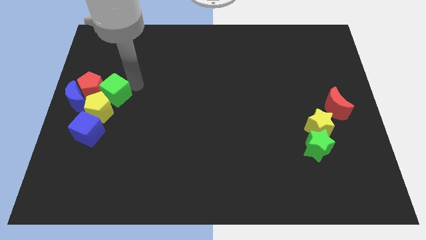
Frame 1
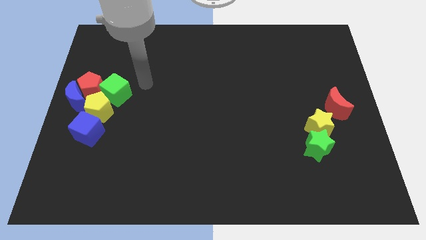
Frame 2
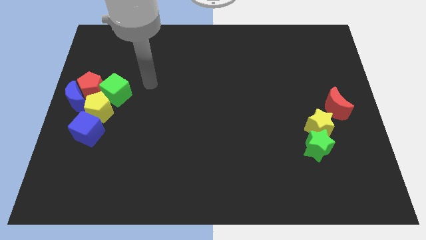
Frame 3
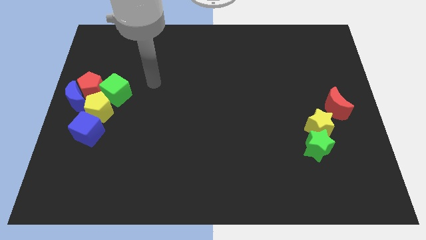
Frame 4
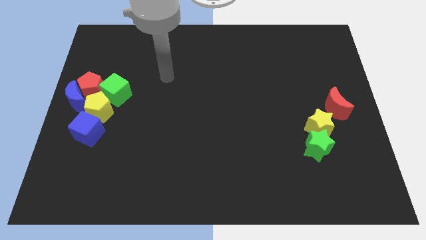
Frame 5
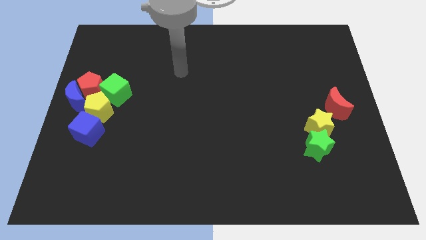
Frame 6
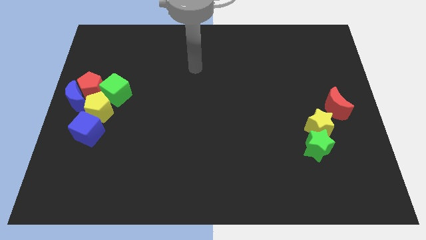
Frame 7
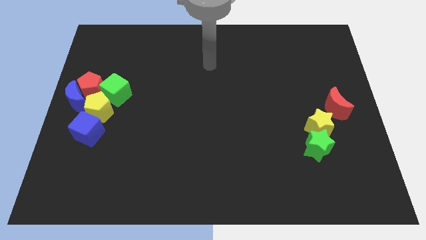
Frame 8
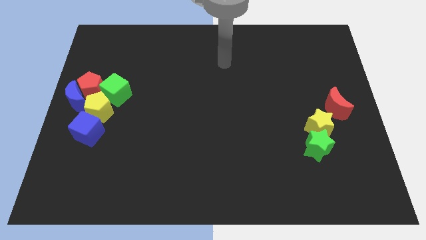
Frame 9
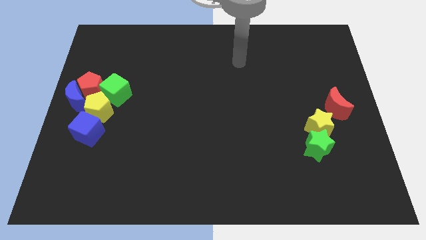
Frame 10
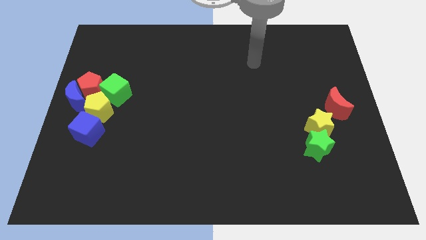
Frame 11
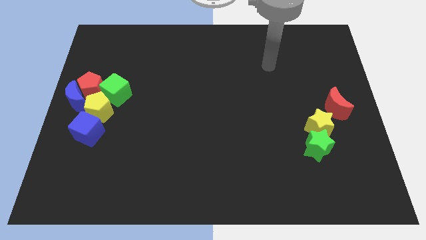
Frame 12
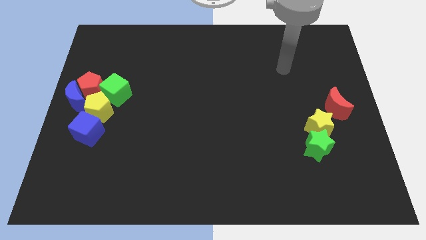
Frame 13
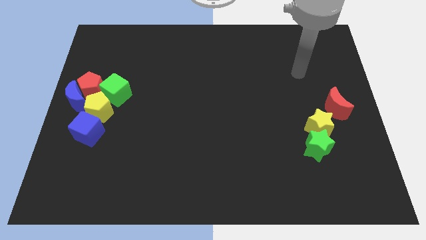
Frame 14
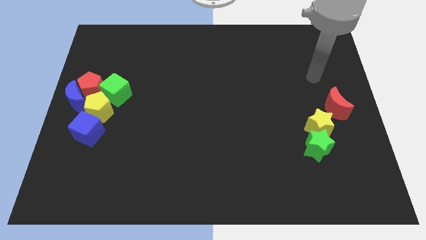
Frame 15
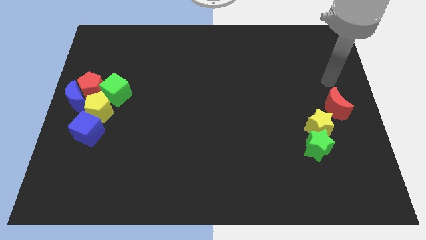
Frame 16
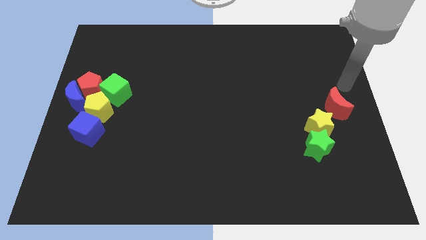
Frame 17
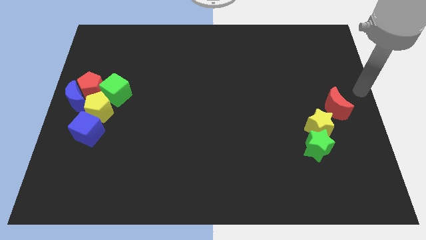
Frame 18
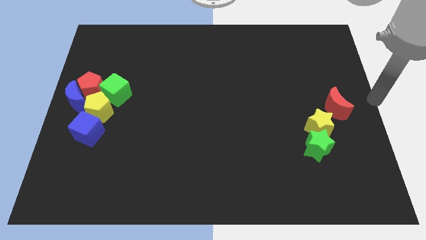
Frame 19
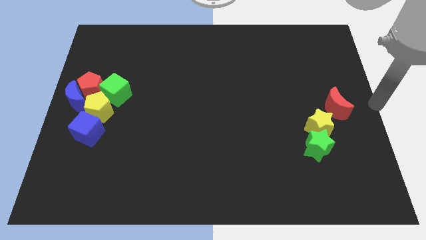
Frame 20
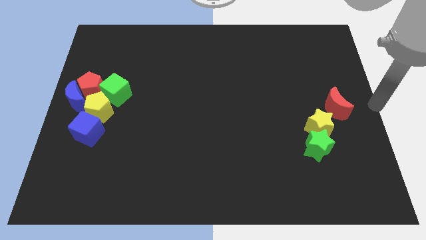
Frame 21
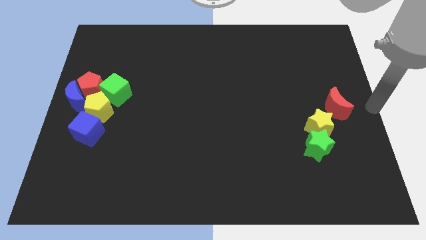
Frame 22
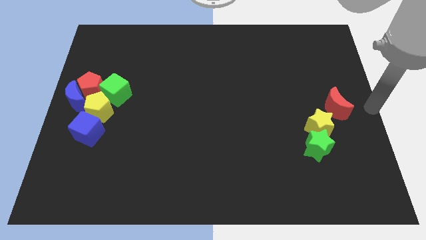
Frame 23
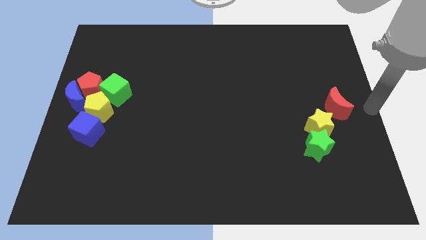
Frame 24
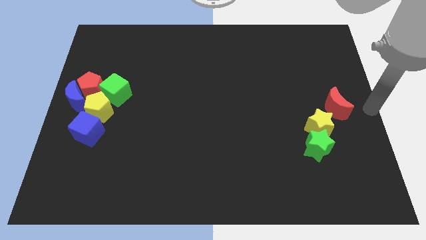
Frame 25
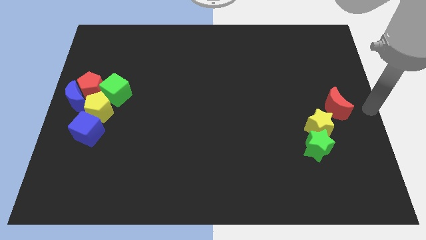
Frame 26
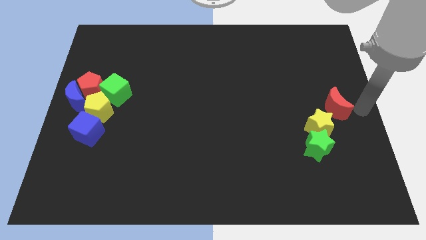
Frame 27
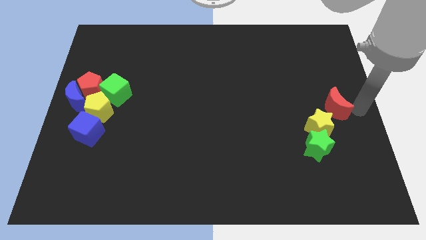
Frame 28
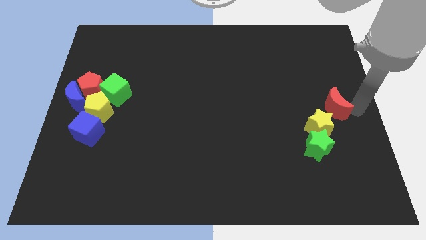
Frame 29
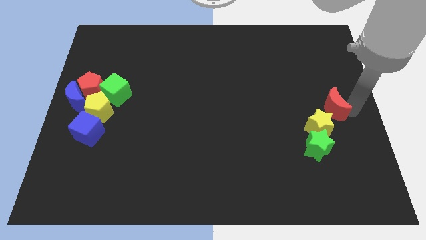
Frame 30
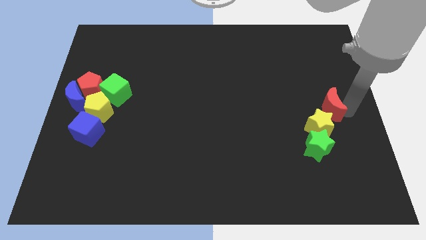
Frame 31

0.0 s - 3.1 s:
touch the right side of the red moon

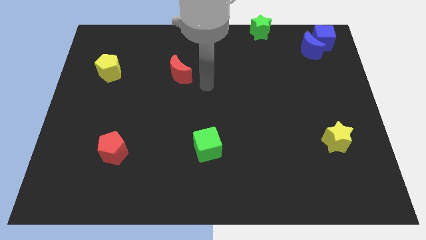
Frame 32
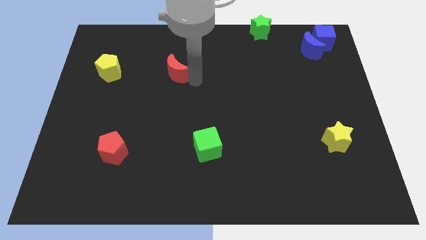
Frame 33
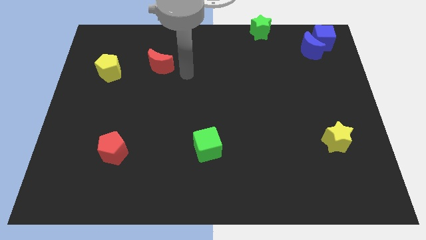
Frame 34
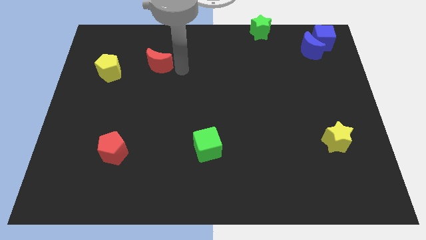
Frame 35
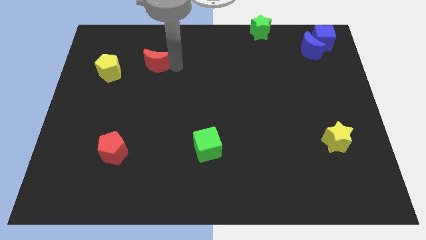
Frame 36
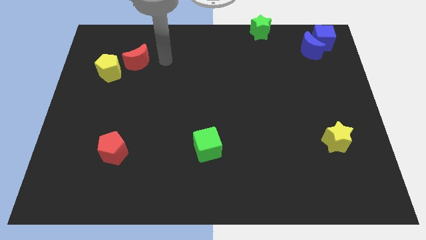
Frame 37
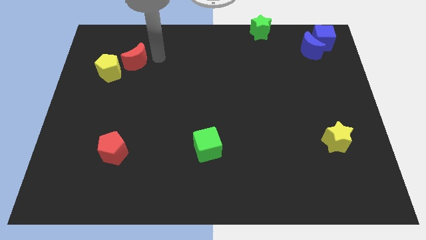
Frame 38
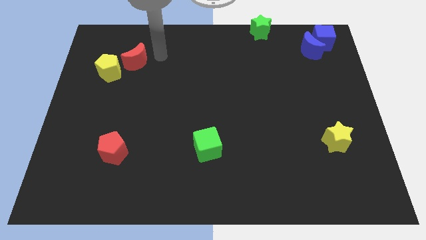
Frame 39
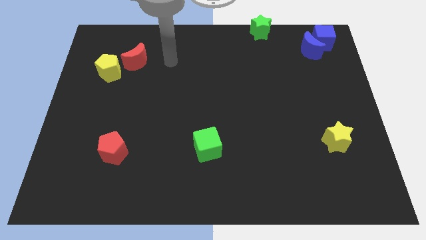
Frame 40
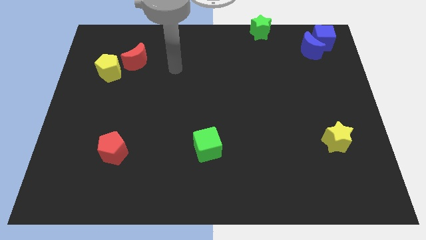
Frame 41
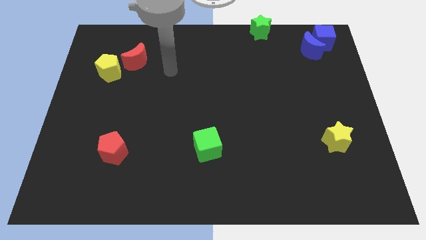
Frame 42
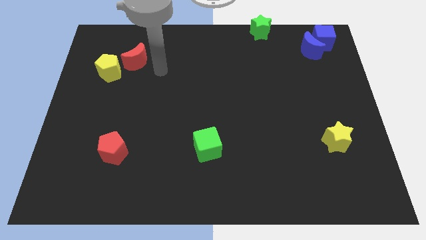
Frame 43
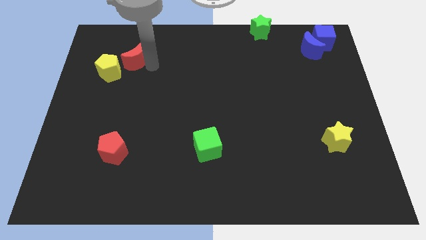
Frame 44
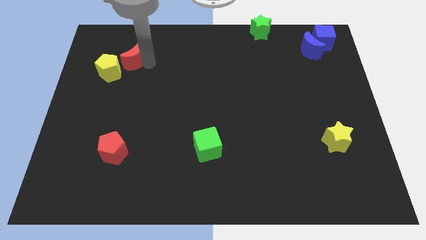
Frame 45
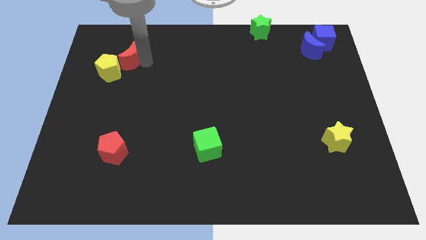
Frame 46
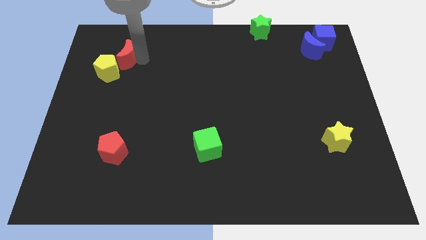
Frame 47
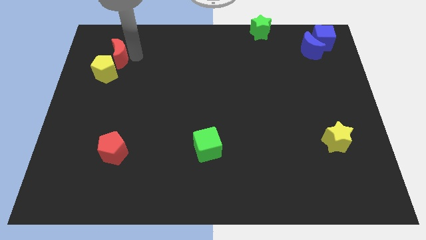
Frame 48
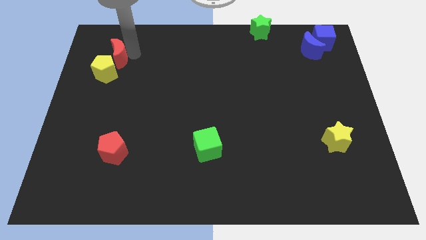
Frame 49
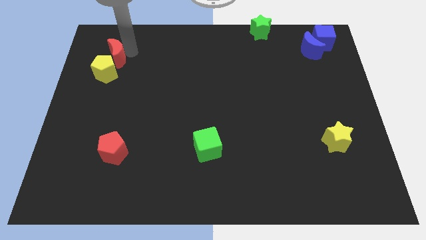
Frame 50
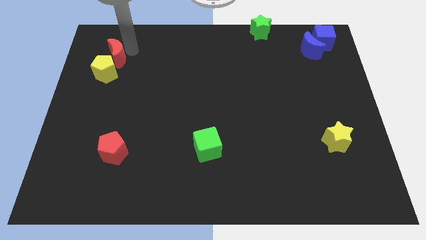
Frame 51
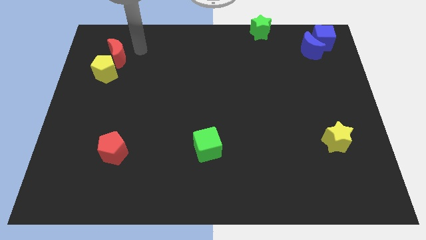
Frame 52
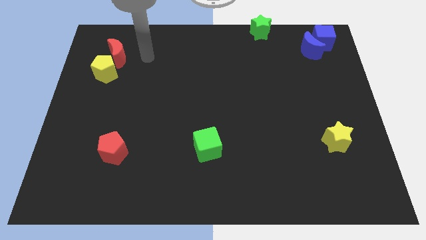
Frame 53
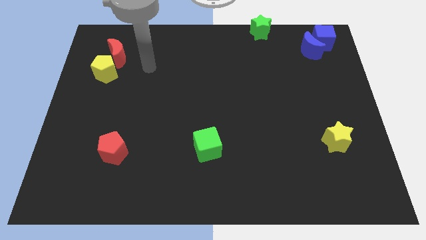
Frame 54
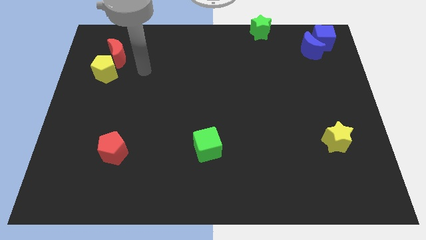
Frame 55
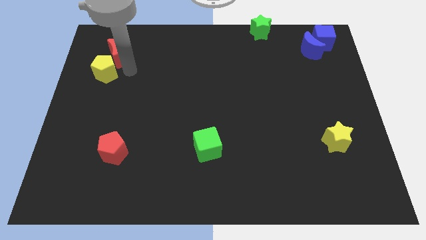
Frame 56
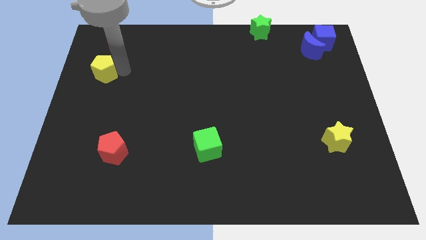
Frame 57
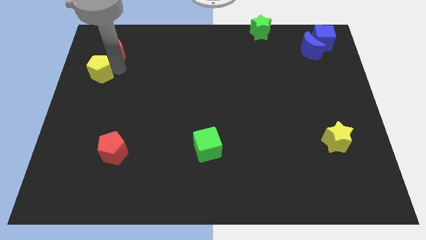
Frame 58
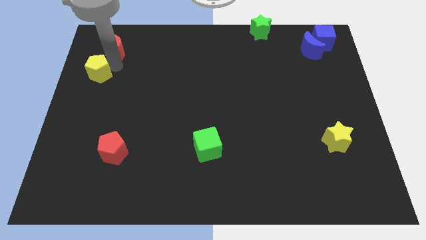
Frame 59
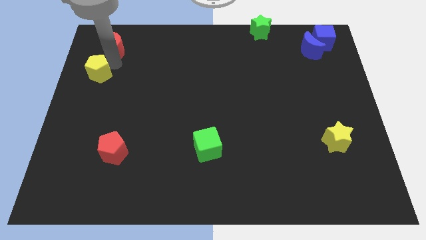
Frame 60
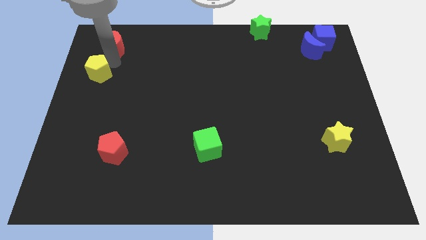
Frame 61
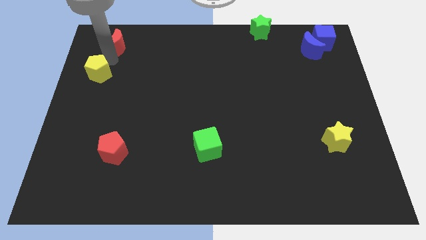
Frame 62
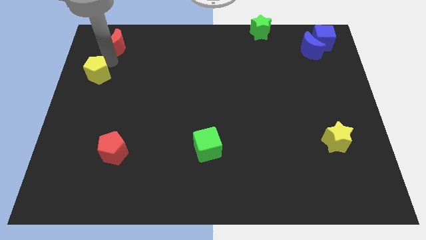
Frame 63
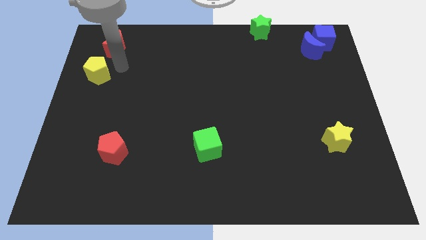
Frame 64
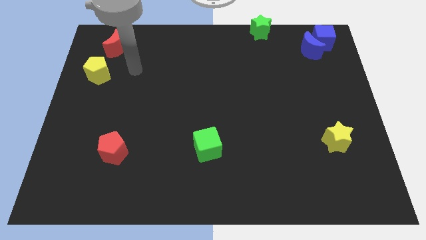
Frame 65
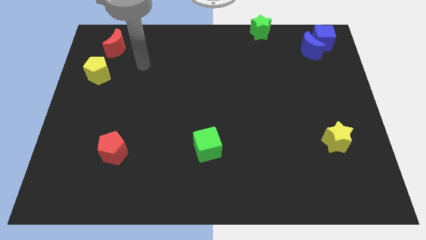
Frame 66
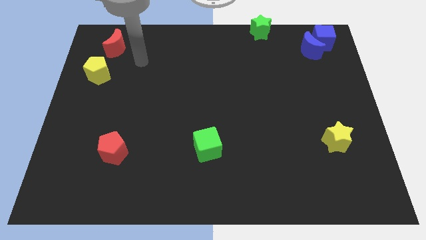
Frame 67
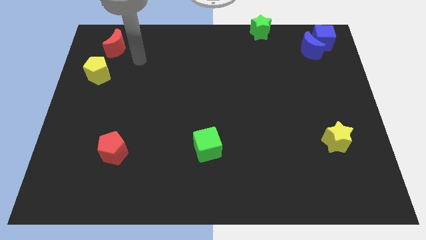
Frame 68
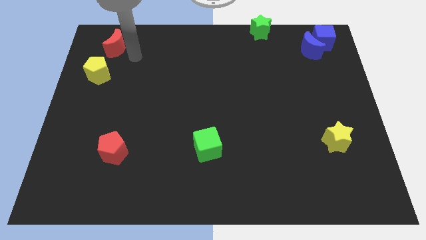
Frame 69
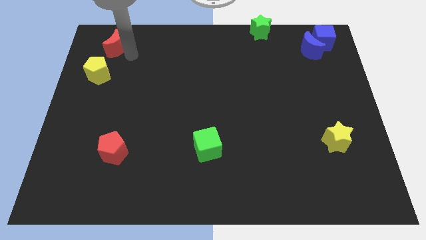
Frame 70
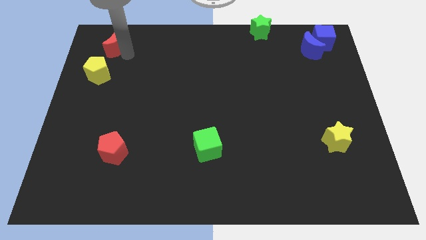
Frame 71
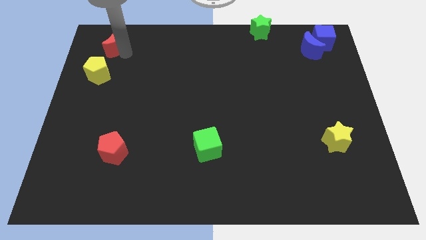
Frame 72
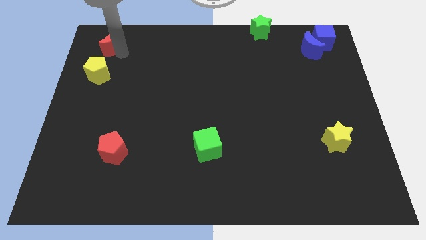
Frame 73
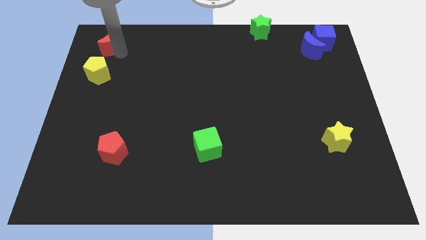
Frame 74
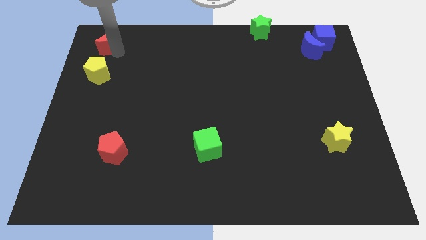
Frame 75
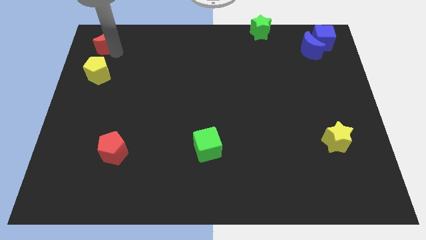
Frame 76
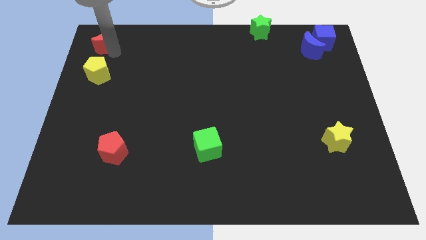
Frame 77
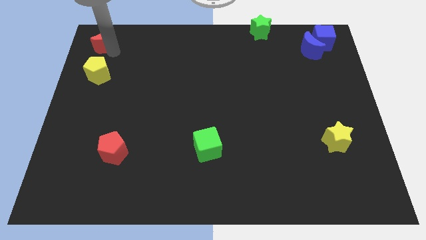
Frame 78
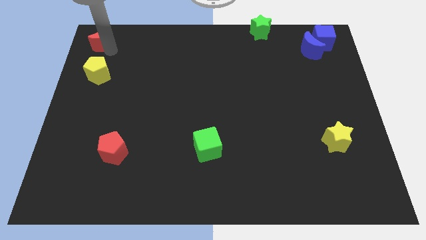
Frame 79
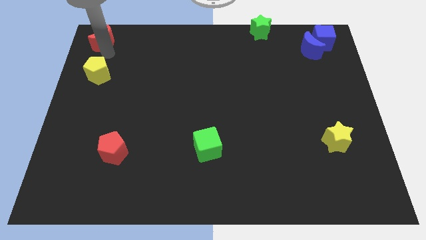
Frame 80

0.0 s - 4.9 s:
place the red moon above the yellow pentagon

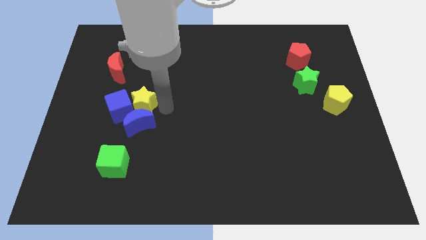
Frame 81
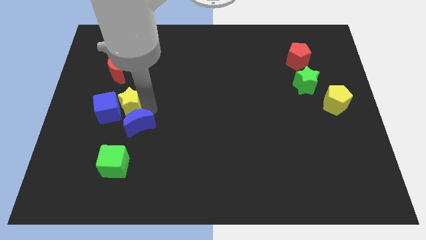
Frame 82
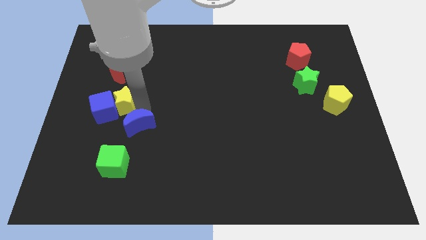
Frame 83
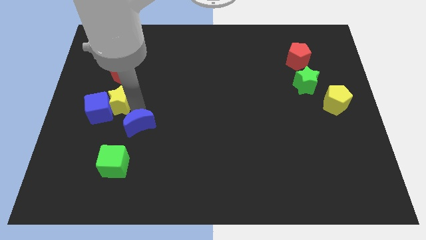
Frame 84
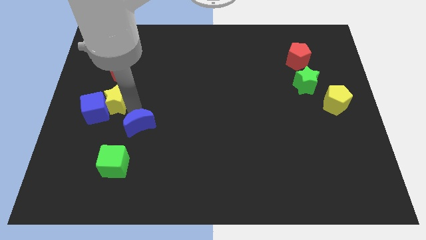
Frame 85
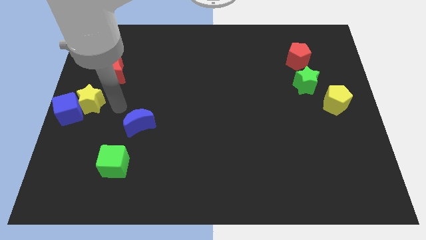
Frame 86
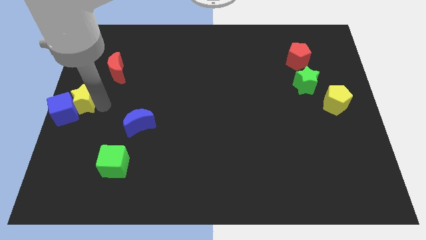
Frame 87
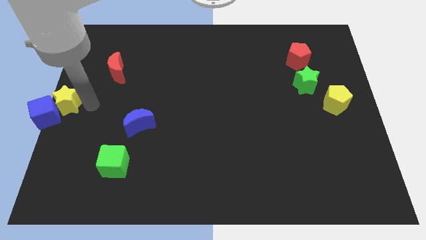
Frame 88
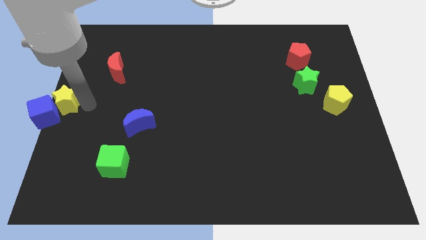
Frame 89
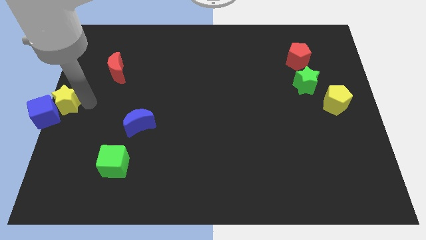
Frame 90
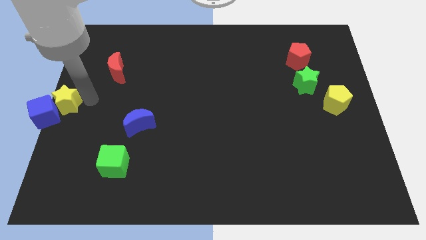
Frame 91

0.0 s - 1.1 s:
slide the yellow star and blue cube away from the blue moon
